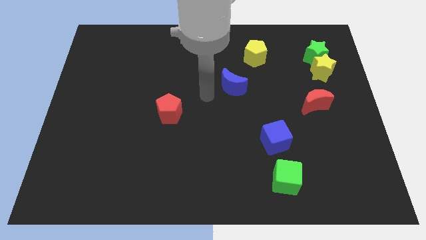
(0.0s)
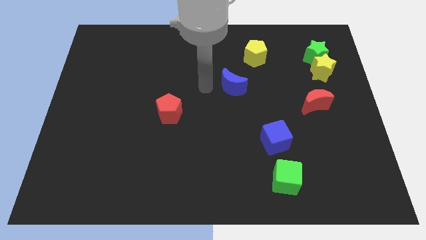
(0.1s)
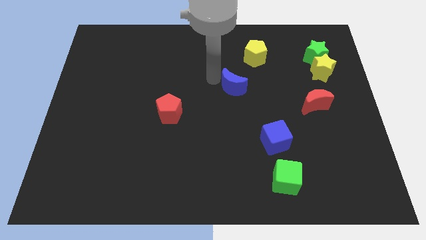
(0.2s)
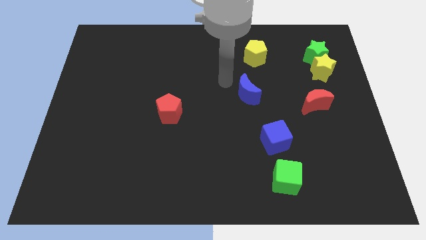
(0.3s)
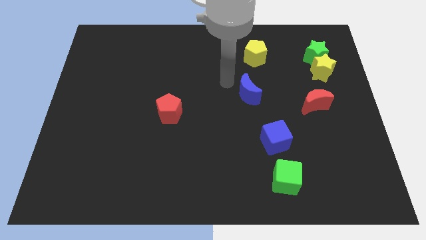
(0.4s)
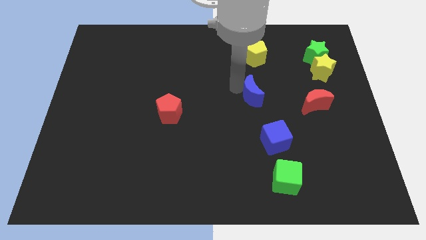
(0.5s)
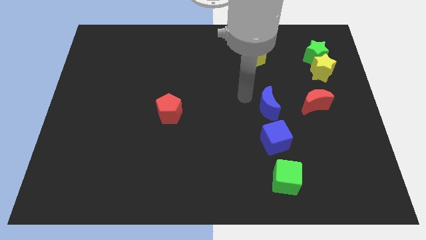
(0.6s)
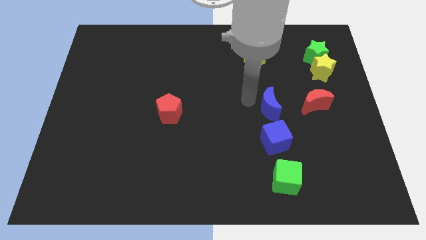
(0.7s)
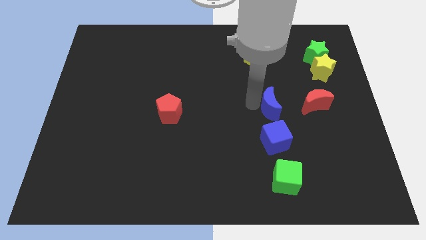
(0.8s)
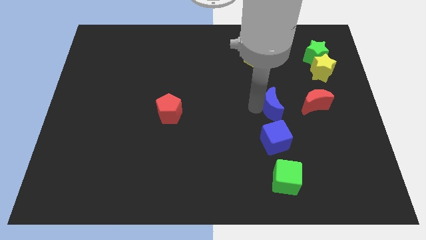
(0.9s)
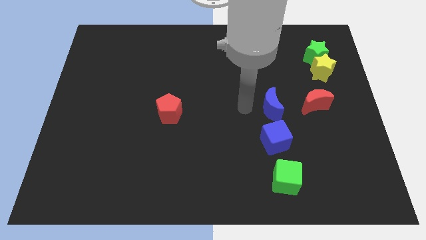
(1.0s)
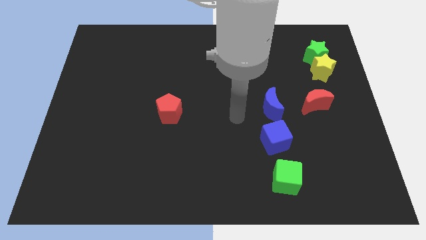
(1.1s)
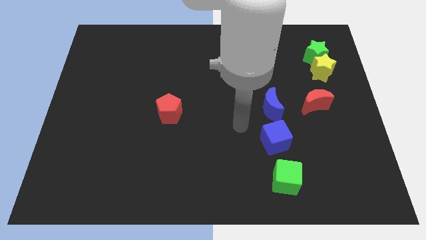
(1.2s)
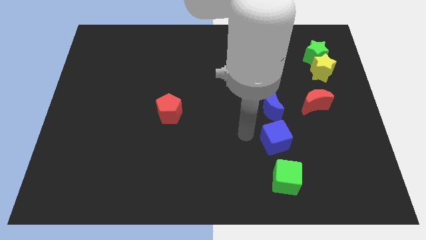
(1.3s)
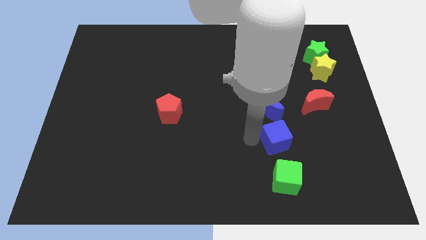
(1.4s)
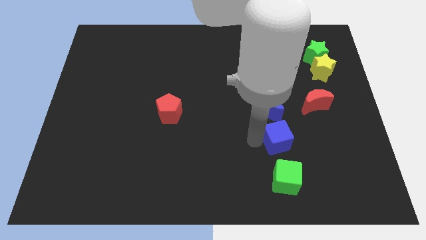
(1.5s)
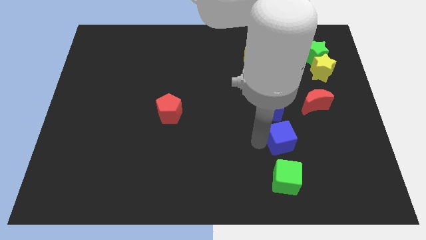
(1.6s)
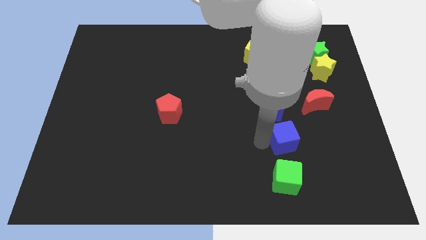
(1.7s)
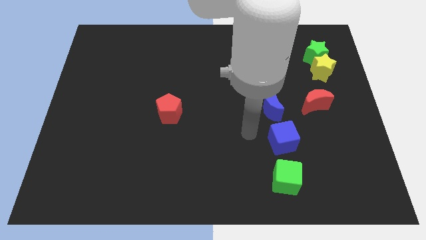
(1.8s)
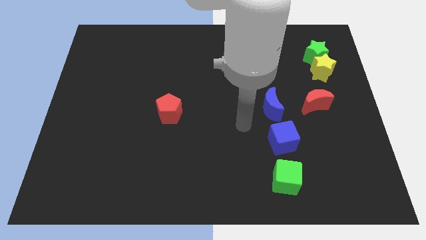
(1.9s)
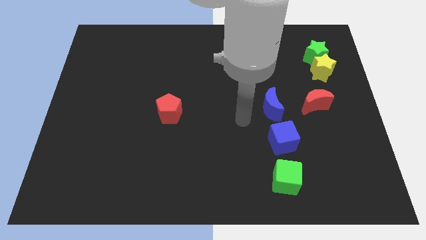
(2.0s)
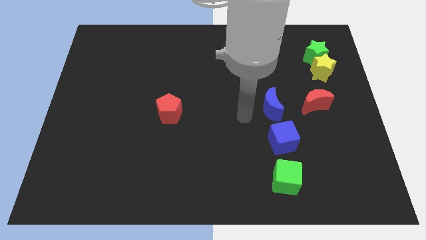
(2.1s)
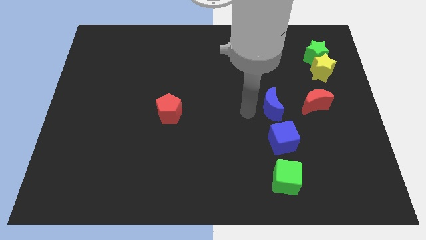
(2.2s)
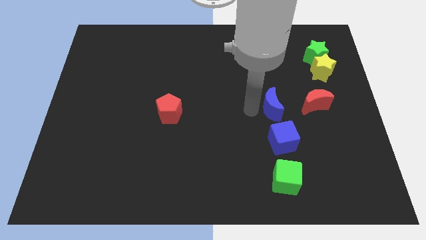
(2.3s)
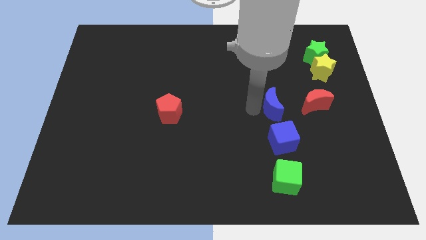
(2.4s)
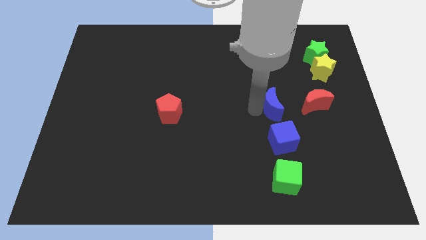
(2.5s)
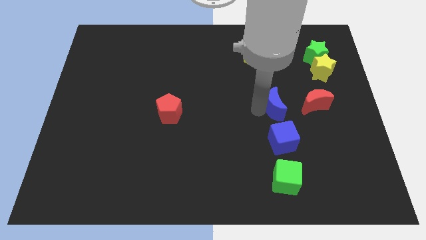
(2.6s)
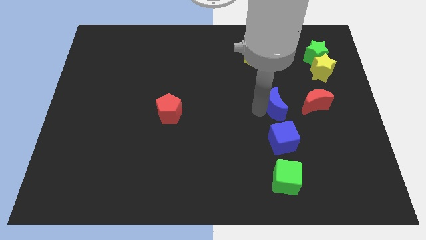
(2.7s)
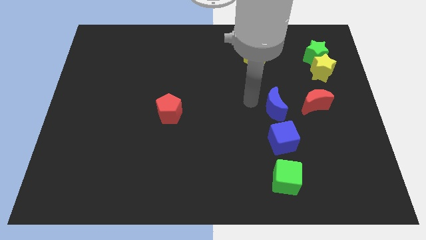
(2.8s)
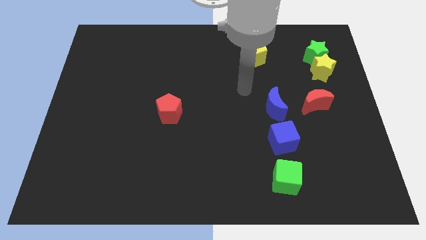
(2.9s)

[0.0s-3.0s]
move the blue moon on top of the blue cube

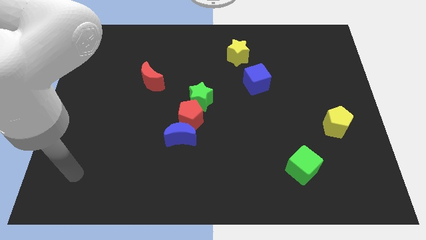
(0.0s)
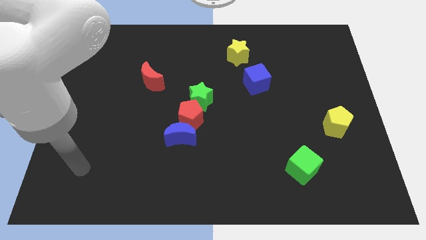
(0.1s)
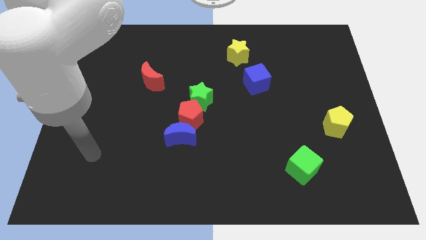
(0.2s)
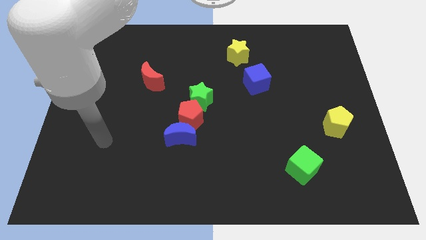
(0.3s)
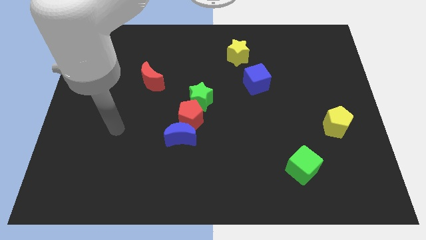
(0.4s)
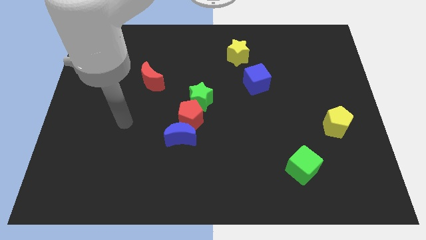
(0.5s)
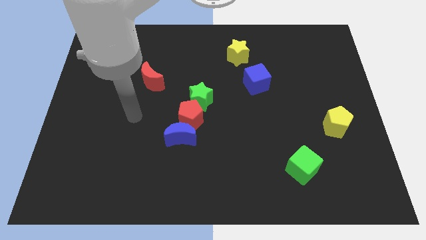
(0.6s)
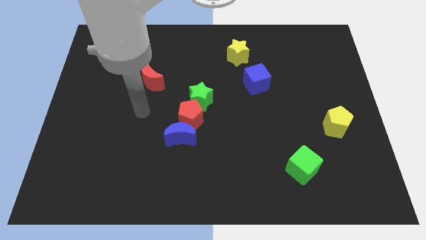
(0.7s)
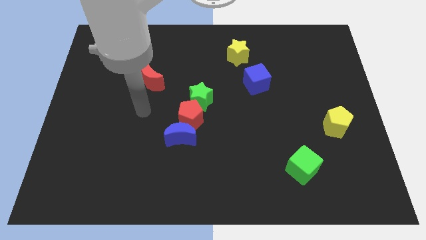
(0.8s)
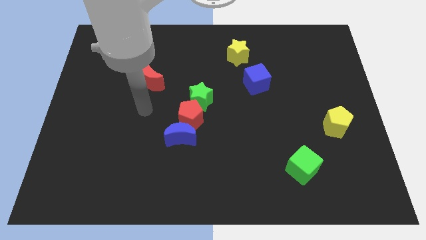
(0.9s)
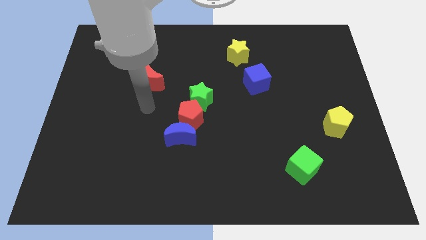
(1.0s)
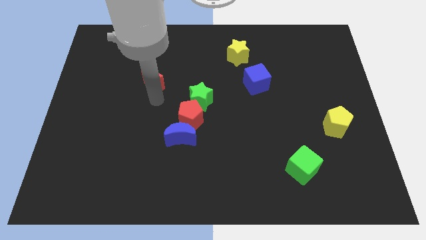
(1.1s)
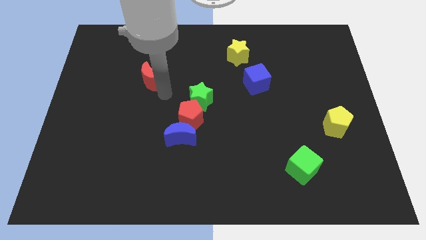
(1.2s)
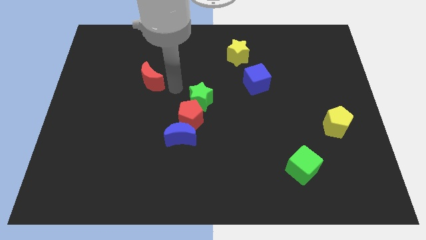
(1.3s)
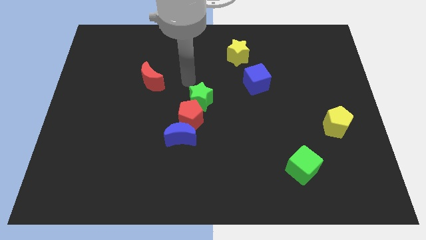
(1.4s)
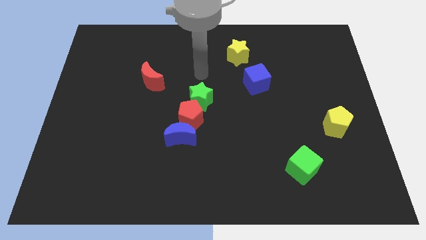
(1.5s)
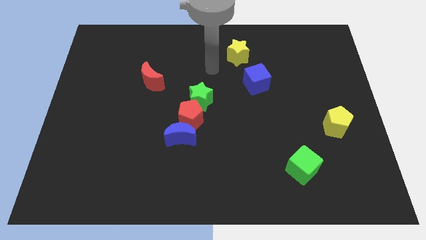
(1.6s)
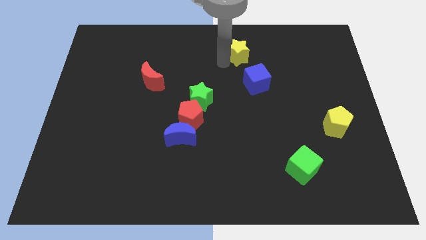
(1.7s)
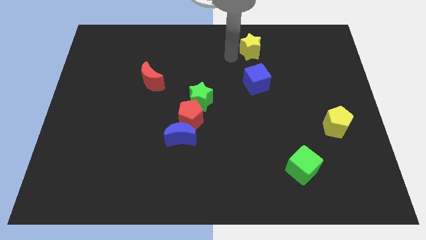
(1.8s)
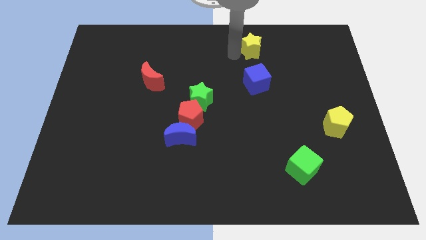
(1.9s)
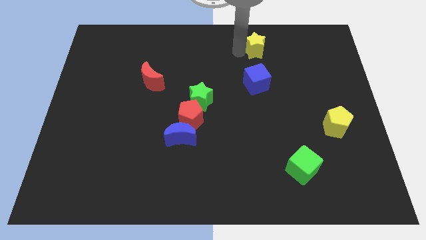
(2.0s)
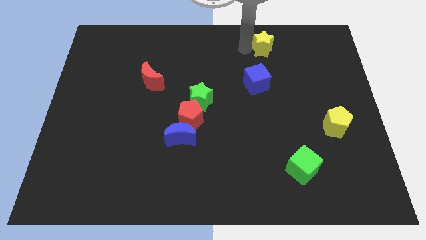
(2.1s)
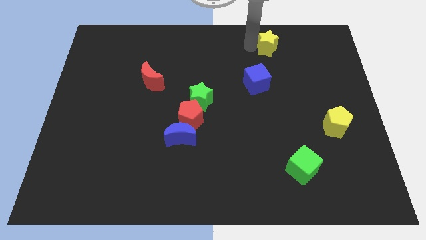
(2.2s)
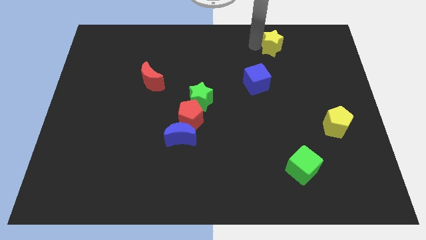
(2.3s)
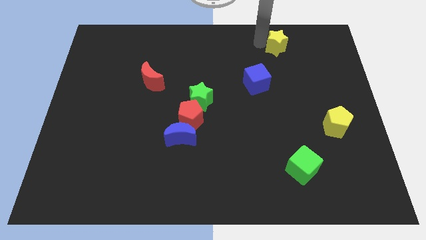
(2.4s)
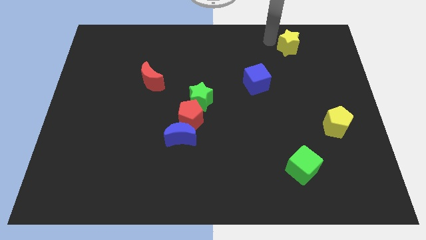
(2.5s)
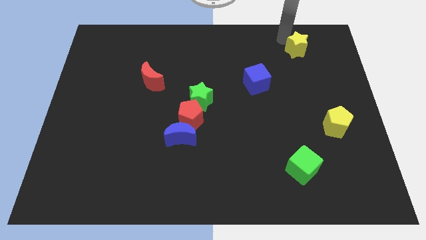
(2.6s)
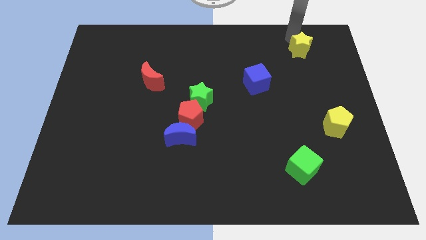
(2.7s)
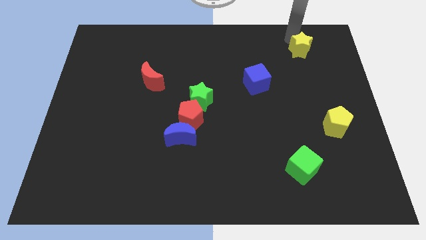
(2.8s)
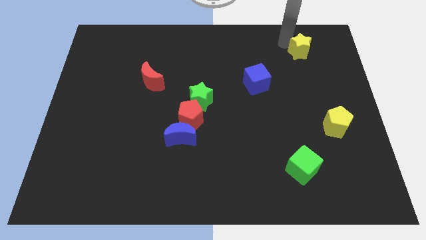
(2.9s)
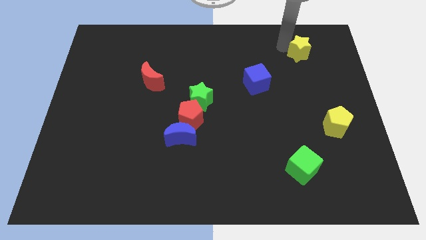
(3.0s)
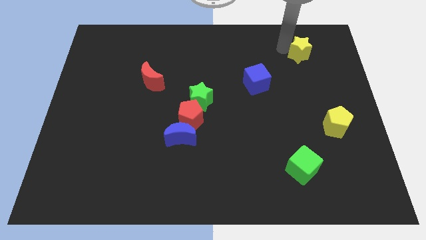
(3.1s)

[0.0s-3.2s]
push yellow star above green star

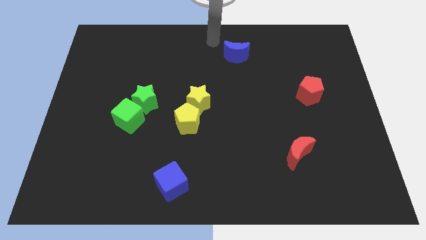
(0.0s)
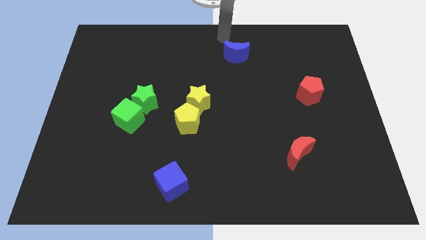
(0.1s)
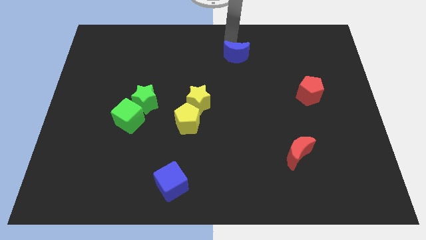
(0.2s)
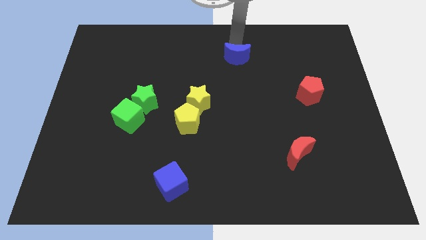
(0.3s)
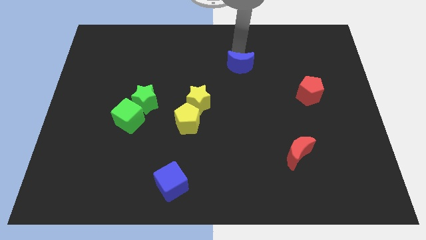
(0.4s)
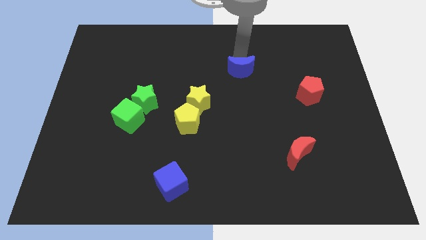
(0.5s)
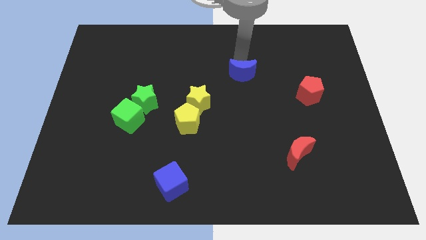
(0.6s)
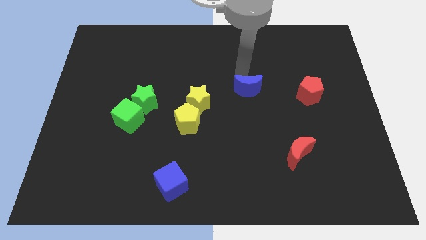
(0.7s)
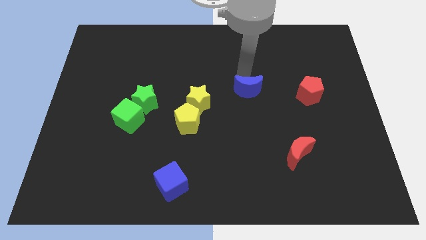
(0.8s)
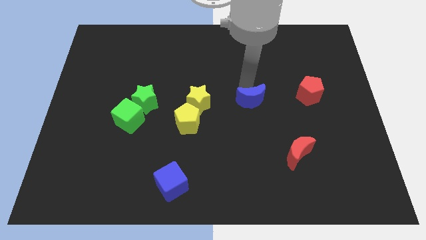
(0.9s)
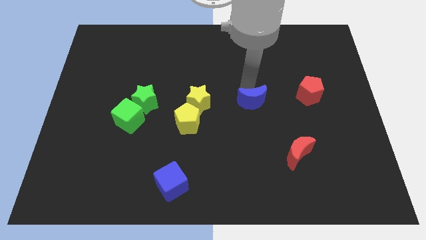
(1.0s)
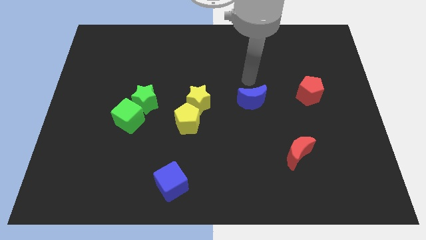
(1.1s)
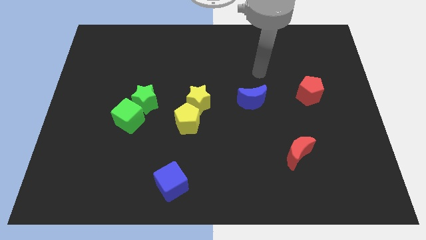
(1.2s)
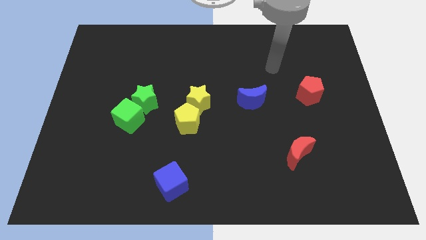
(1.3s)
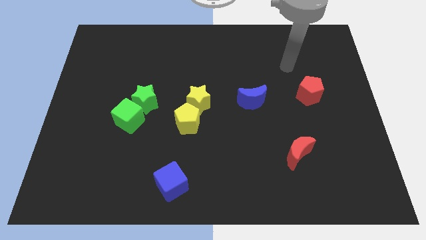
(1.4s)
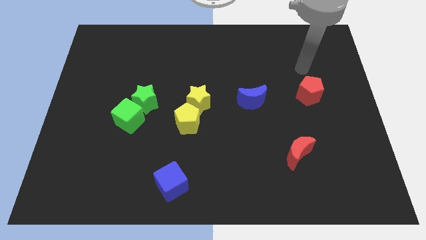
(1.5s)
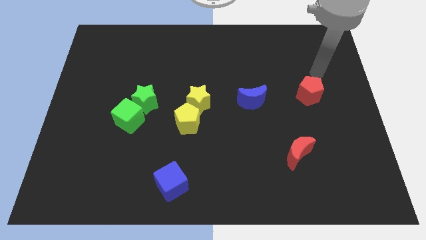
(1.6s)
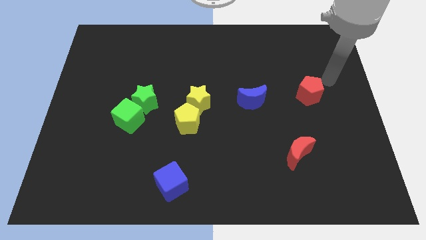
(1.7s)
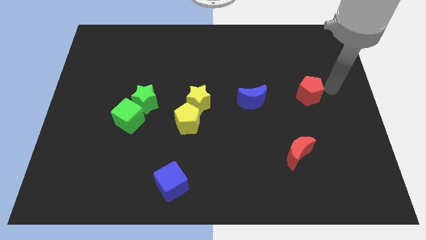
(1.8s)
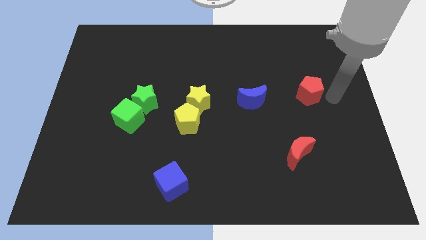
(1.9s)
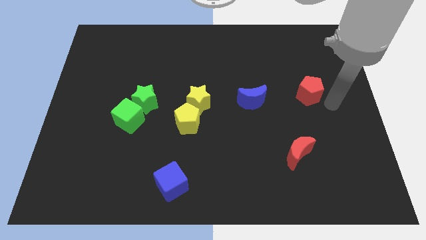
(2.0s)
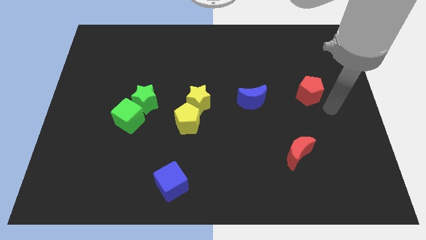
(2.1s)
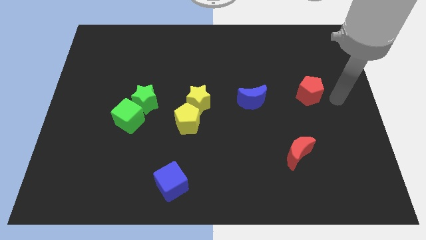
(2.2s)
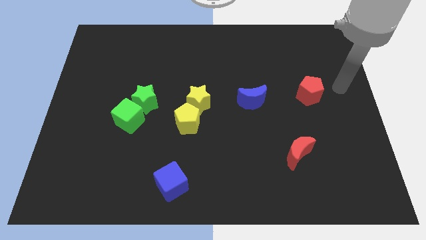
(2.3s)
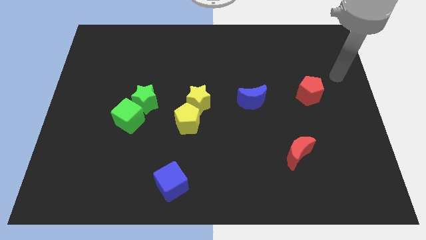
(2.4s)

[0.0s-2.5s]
slide the blue crescent to the center of the board

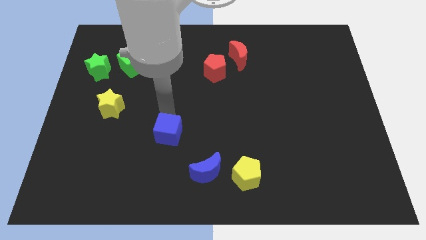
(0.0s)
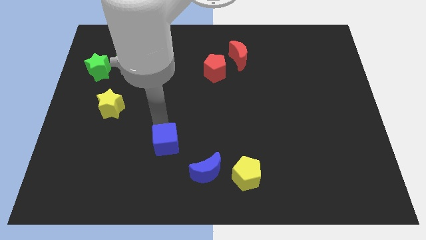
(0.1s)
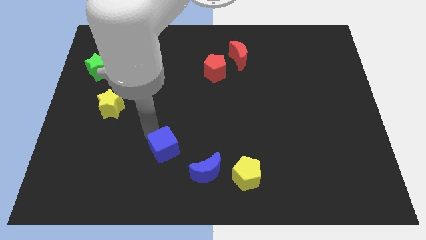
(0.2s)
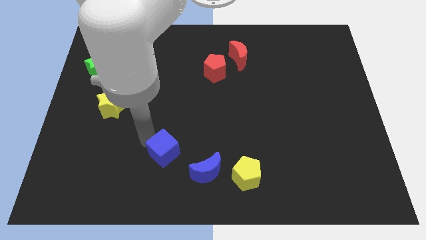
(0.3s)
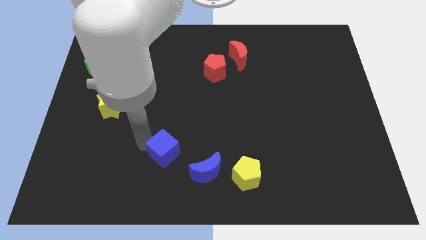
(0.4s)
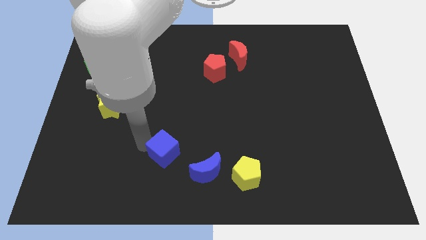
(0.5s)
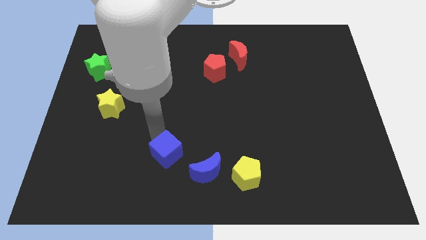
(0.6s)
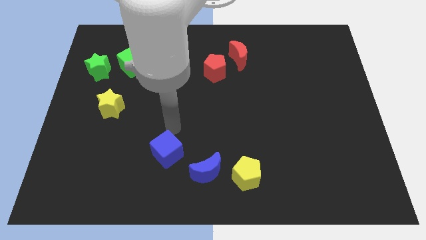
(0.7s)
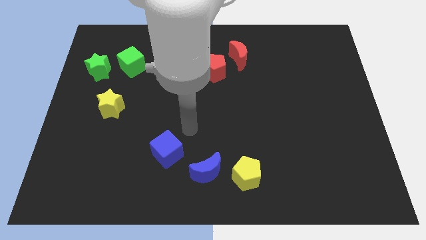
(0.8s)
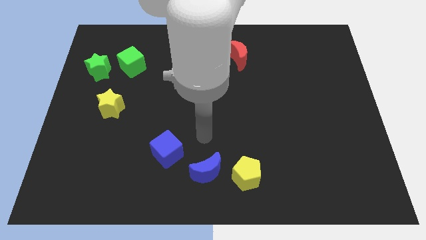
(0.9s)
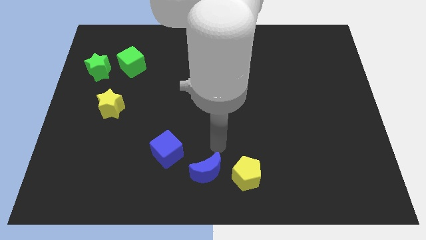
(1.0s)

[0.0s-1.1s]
move the blue cube towards the left side of the blue crescent
